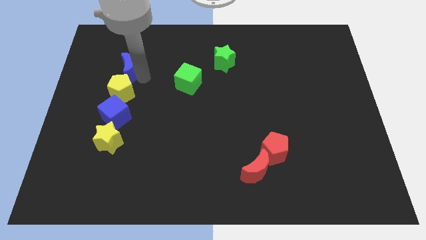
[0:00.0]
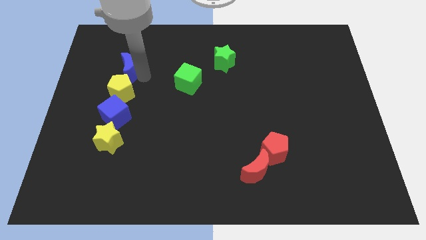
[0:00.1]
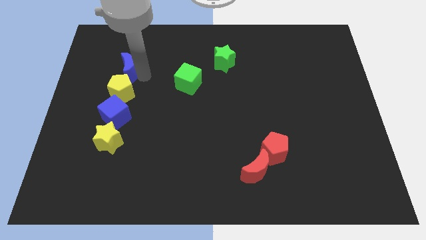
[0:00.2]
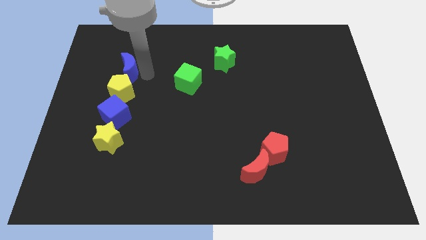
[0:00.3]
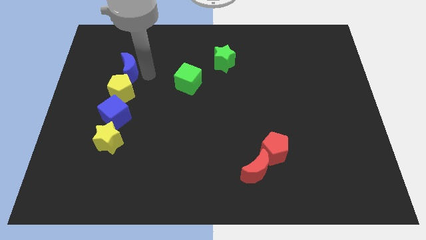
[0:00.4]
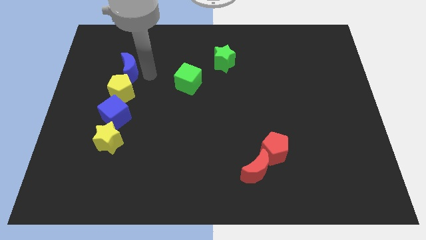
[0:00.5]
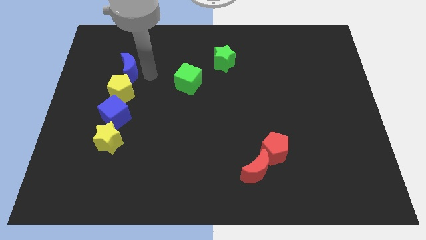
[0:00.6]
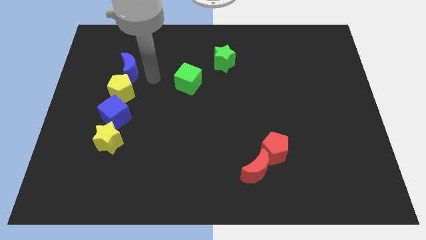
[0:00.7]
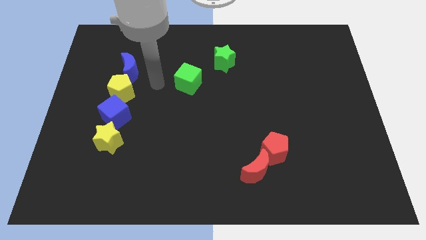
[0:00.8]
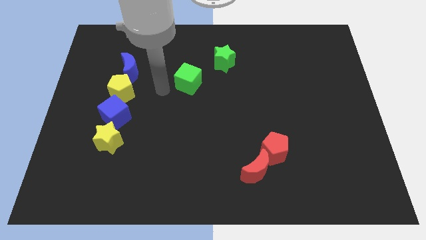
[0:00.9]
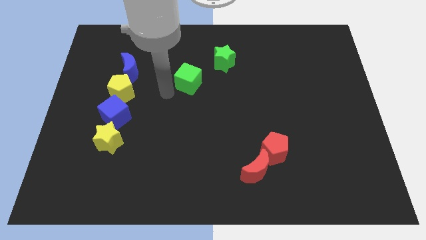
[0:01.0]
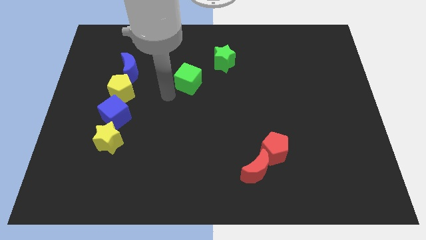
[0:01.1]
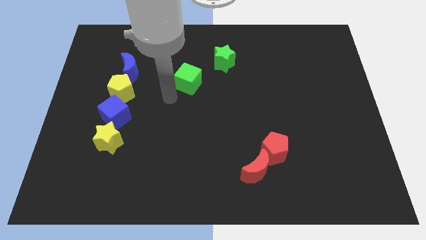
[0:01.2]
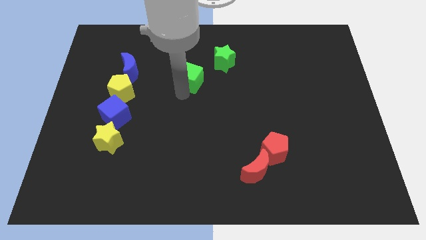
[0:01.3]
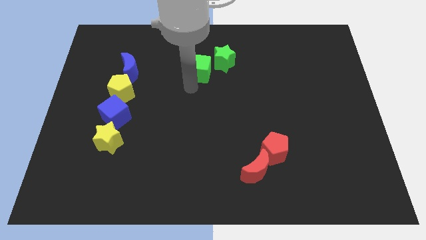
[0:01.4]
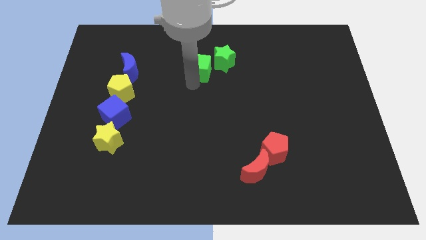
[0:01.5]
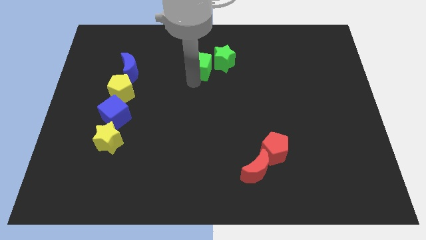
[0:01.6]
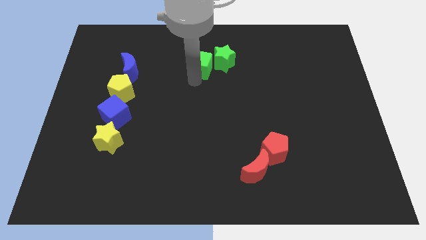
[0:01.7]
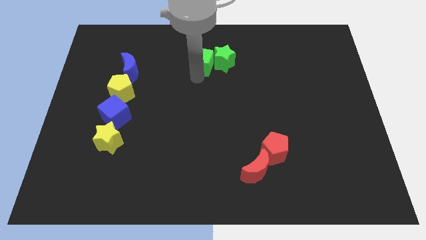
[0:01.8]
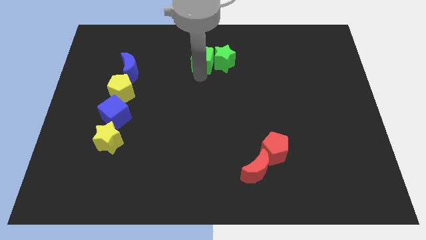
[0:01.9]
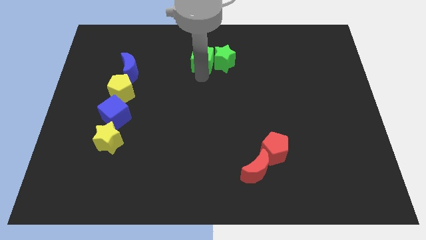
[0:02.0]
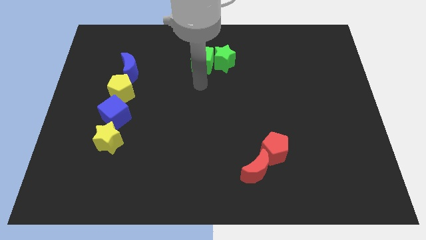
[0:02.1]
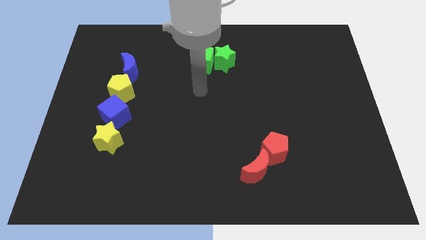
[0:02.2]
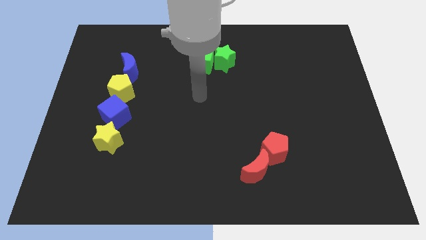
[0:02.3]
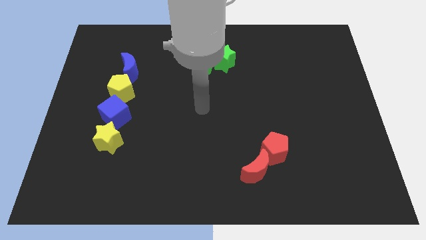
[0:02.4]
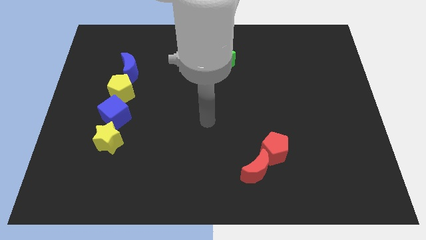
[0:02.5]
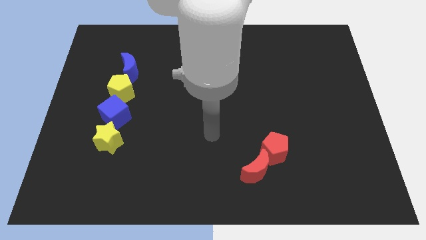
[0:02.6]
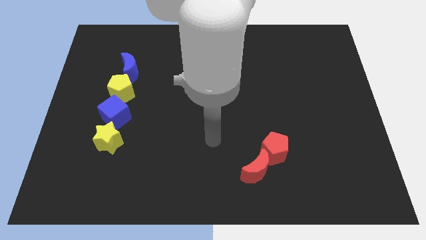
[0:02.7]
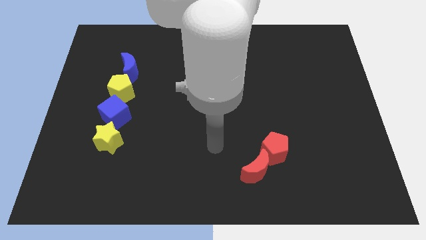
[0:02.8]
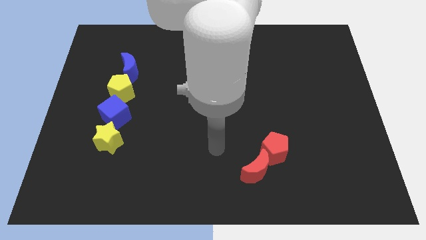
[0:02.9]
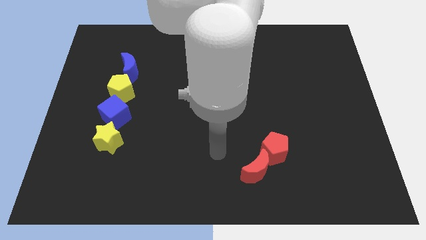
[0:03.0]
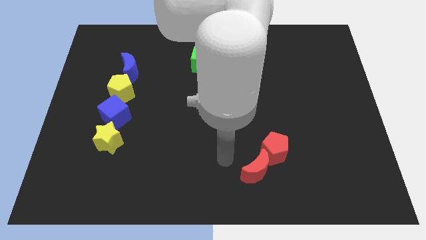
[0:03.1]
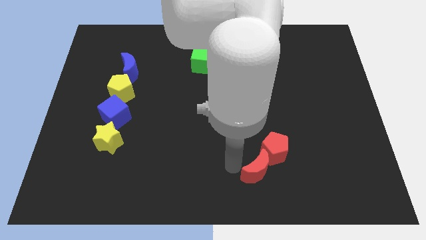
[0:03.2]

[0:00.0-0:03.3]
place the green cube beside the green star

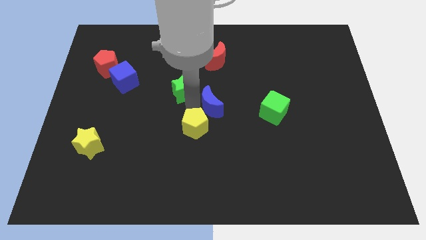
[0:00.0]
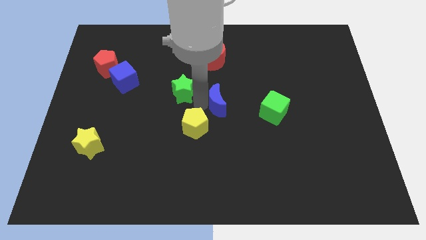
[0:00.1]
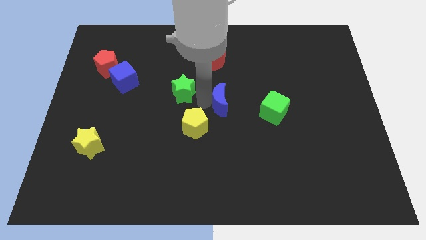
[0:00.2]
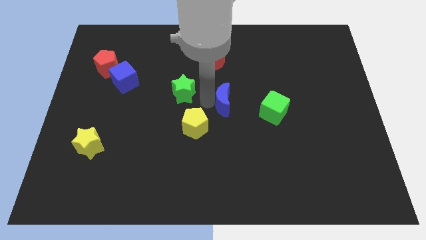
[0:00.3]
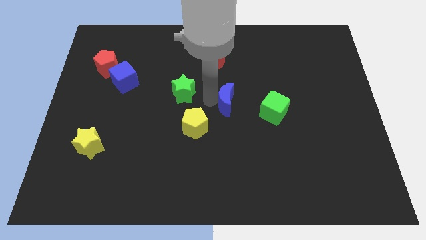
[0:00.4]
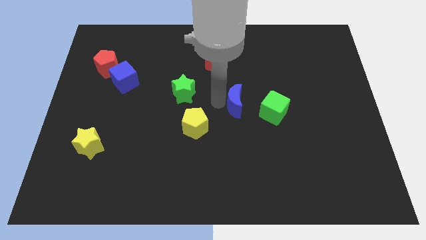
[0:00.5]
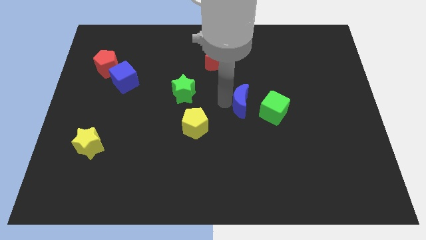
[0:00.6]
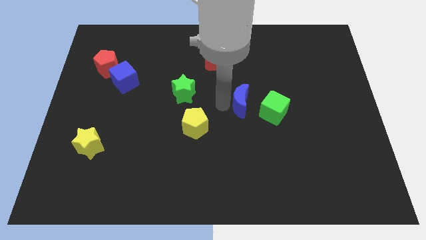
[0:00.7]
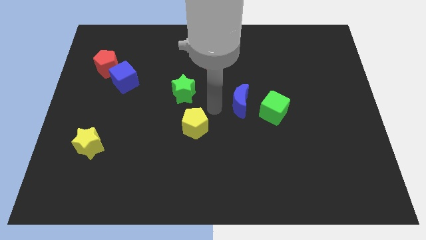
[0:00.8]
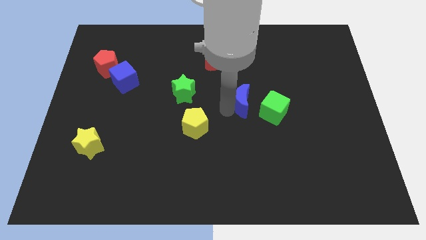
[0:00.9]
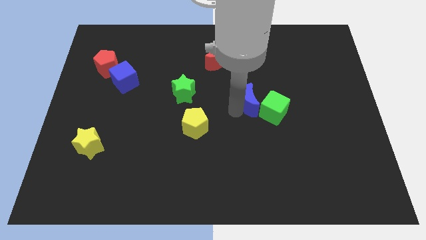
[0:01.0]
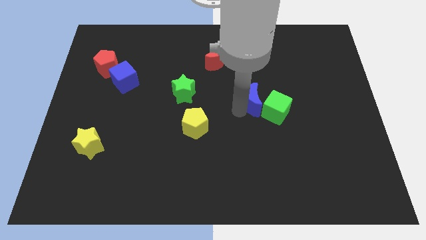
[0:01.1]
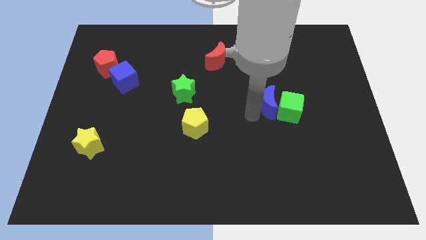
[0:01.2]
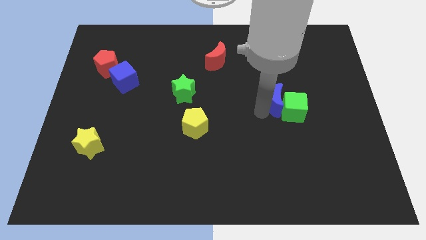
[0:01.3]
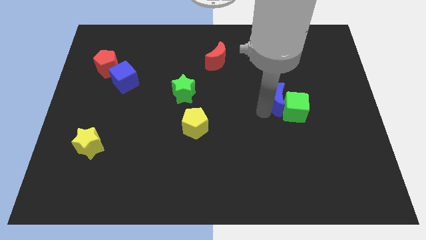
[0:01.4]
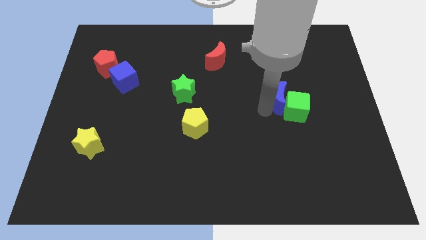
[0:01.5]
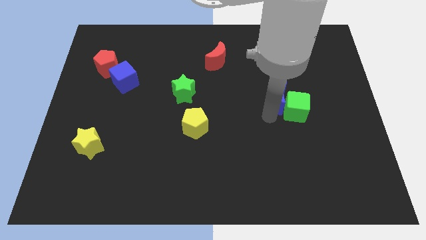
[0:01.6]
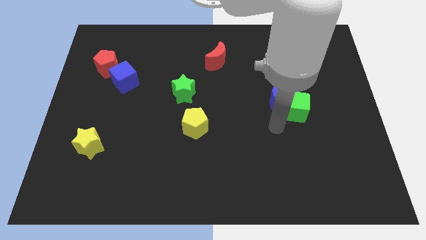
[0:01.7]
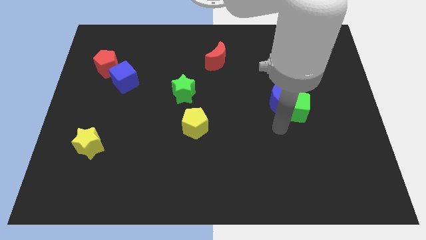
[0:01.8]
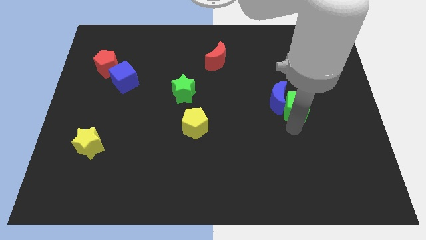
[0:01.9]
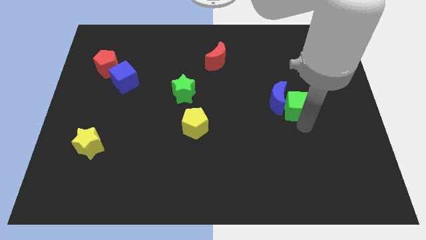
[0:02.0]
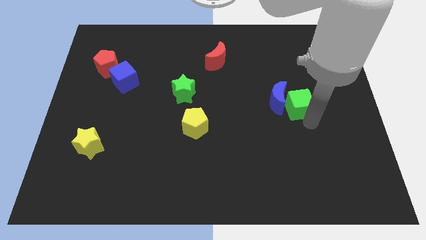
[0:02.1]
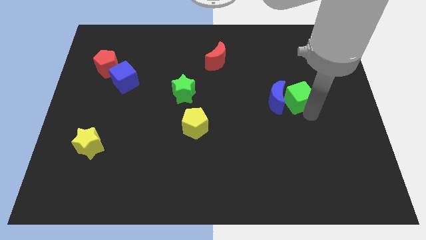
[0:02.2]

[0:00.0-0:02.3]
push the blue crescent into the green cube

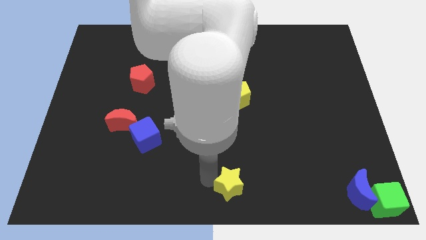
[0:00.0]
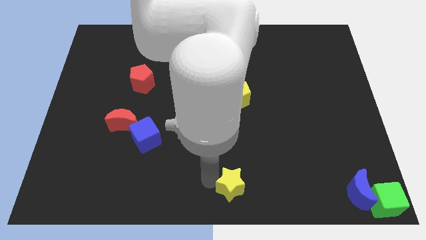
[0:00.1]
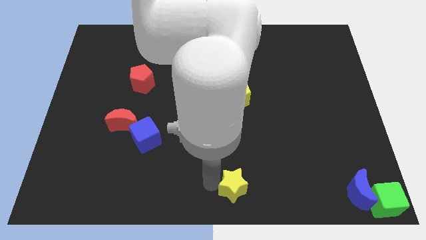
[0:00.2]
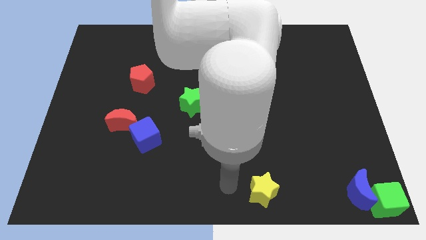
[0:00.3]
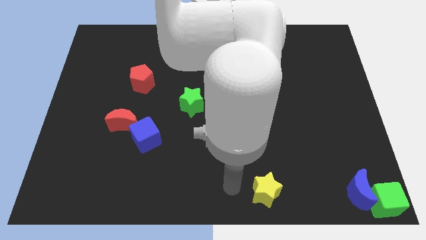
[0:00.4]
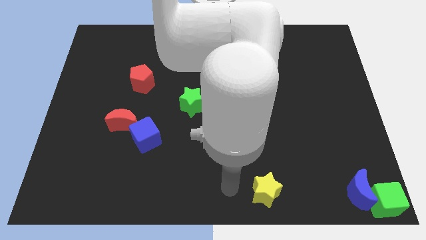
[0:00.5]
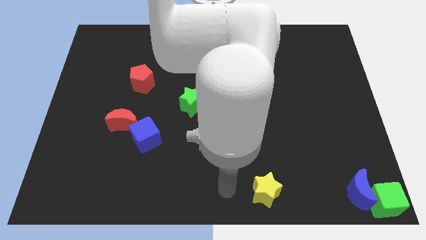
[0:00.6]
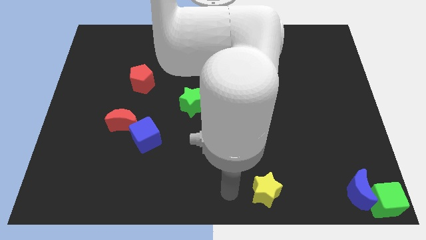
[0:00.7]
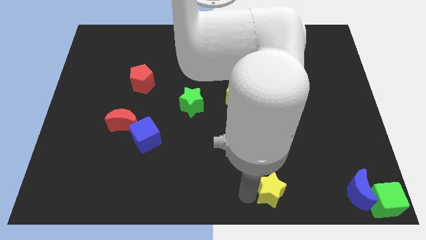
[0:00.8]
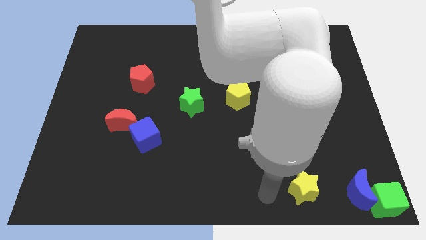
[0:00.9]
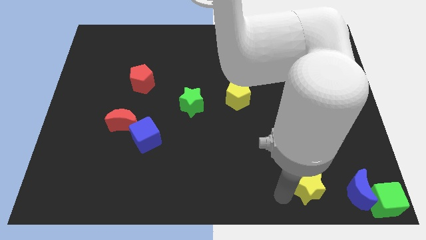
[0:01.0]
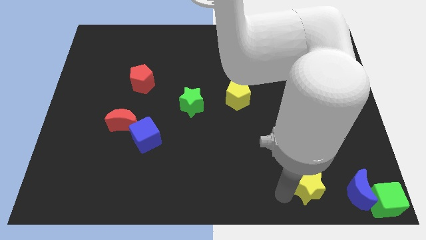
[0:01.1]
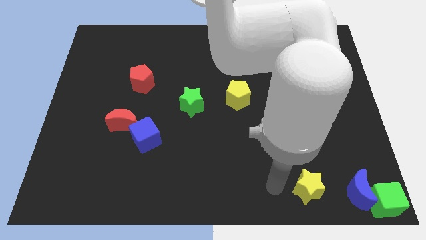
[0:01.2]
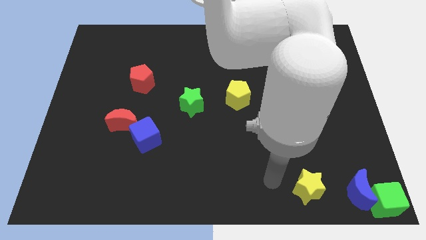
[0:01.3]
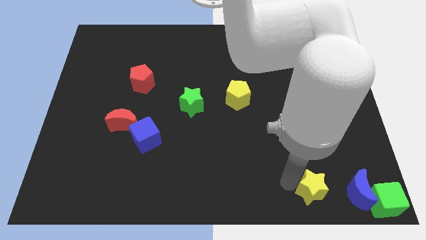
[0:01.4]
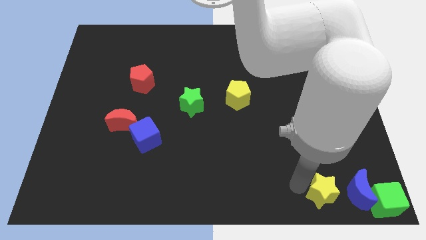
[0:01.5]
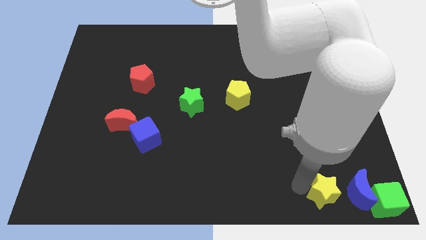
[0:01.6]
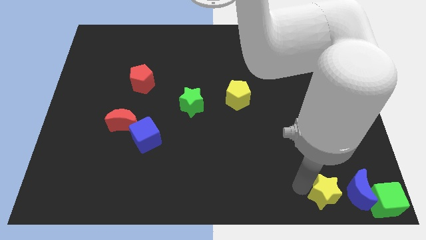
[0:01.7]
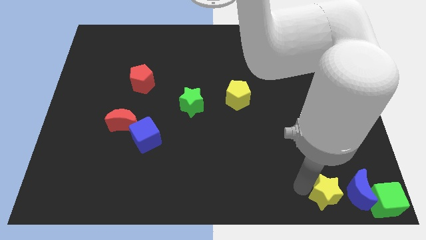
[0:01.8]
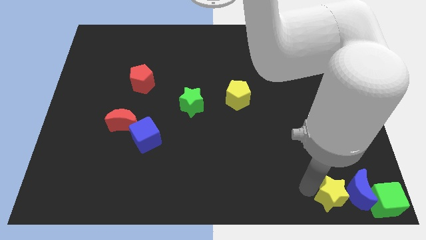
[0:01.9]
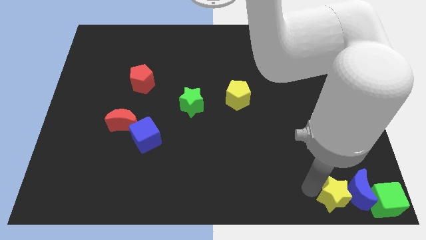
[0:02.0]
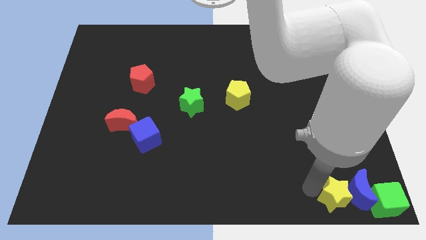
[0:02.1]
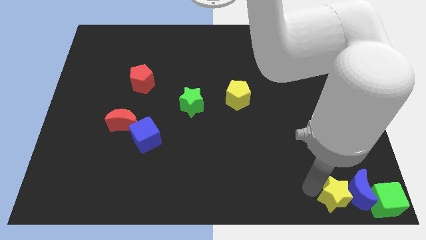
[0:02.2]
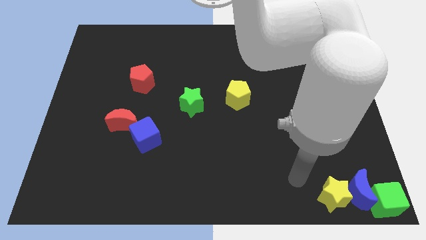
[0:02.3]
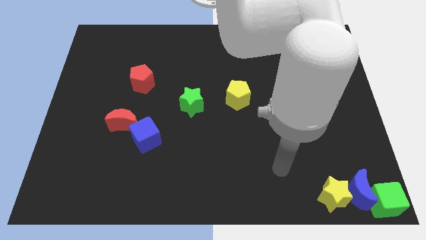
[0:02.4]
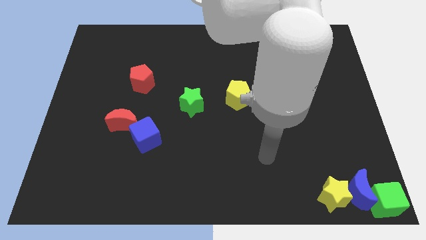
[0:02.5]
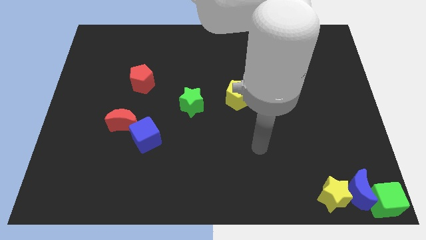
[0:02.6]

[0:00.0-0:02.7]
push the yellow star towards the half blue moon

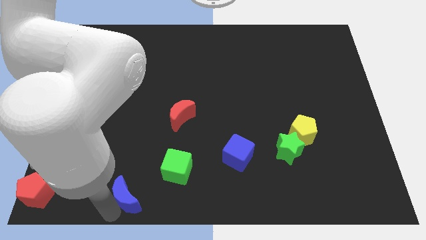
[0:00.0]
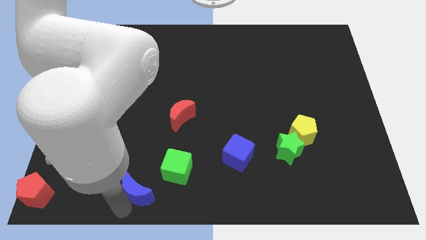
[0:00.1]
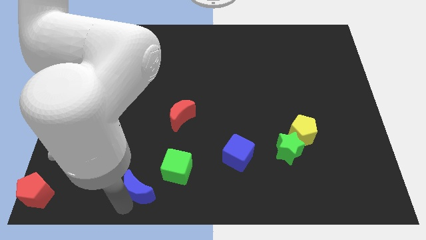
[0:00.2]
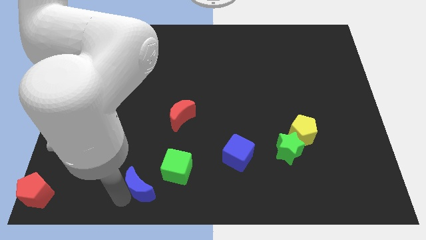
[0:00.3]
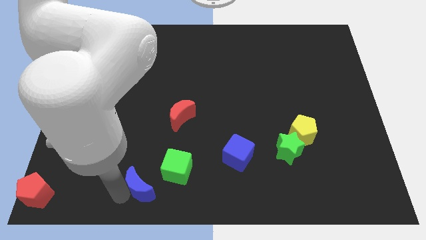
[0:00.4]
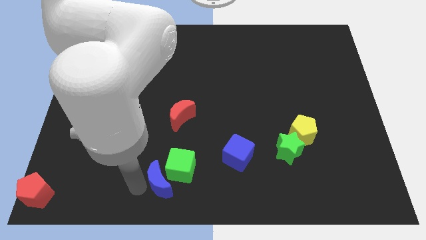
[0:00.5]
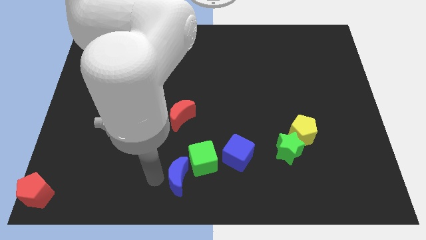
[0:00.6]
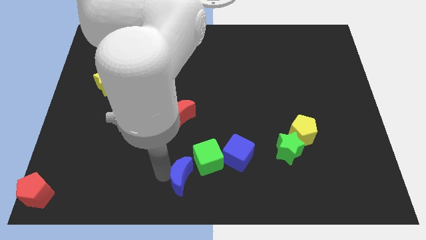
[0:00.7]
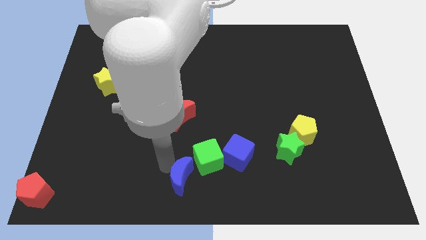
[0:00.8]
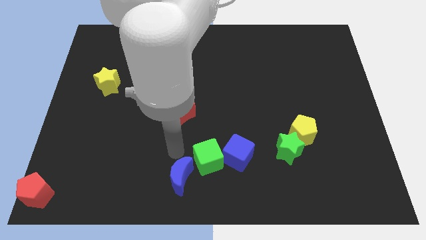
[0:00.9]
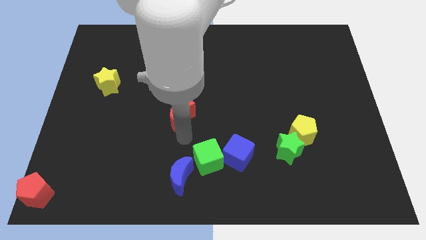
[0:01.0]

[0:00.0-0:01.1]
push the blue moon into the green cube
